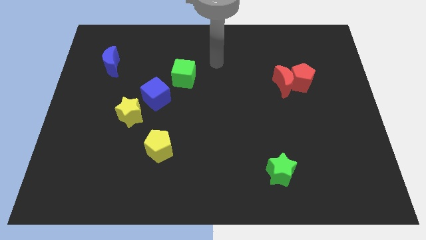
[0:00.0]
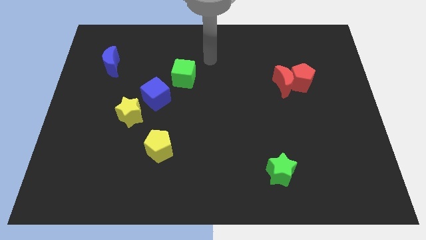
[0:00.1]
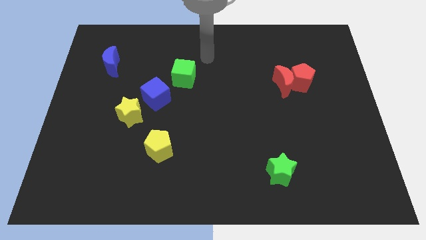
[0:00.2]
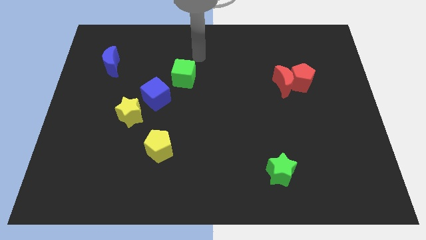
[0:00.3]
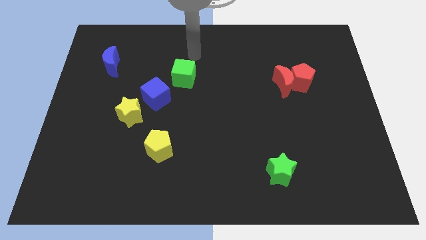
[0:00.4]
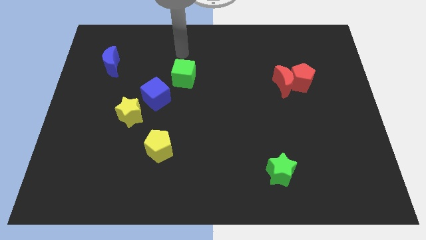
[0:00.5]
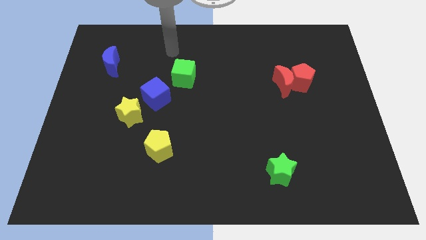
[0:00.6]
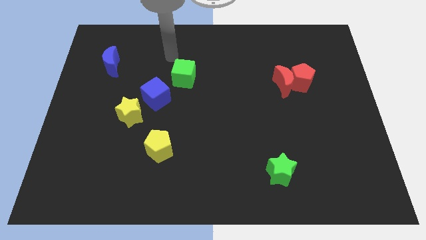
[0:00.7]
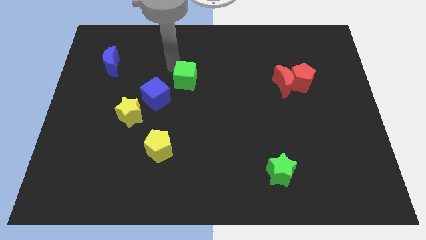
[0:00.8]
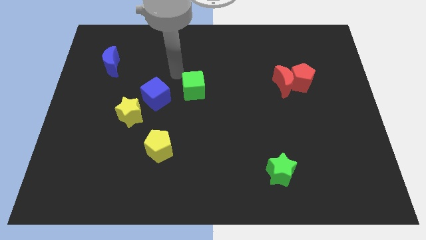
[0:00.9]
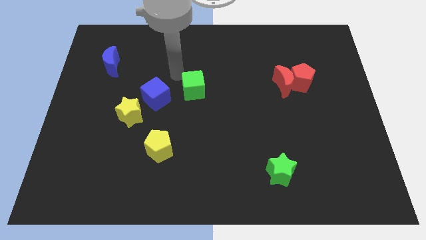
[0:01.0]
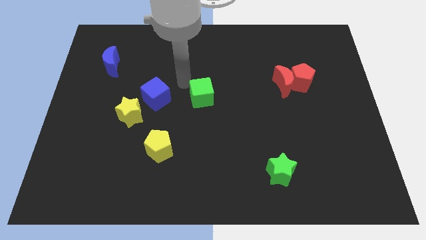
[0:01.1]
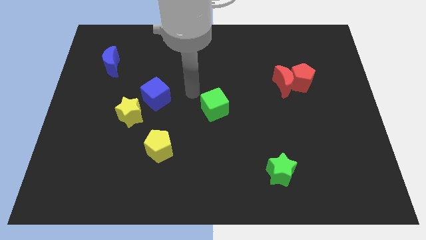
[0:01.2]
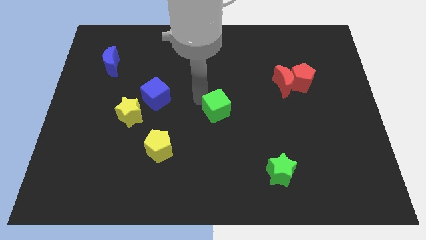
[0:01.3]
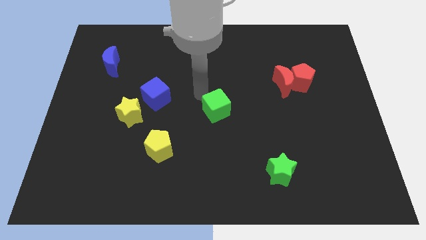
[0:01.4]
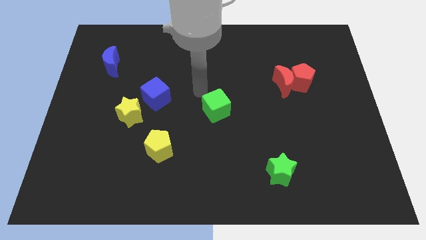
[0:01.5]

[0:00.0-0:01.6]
put the green cube between the yellow pentagon and red moon

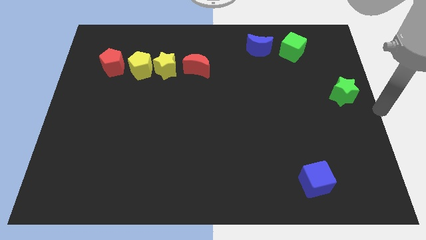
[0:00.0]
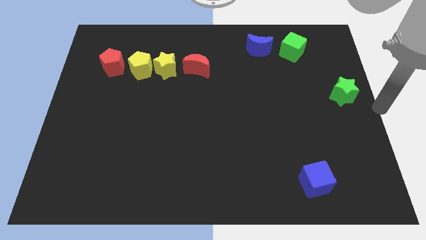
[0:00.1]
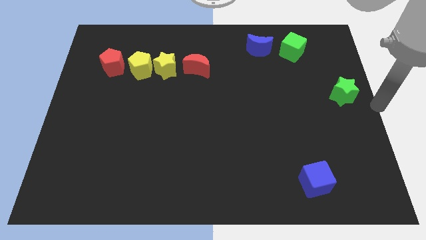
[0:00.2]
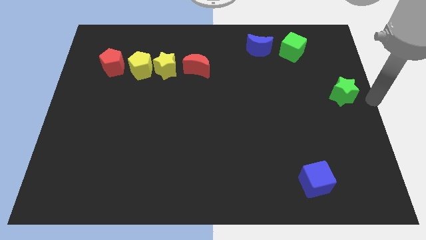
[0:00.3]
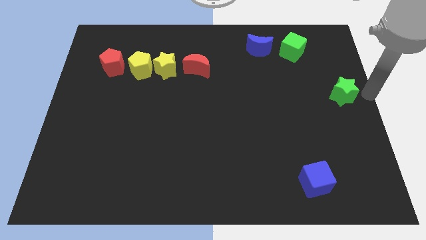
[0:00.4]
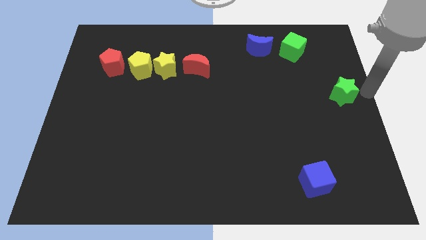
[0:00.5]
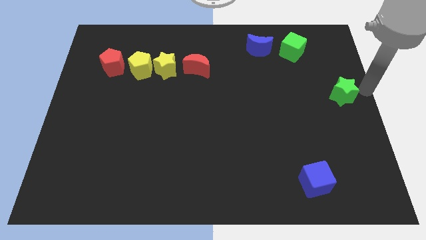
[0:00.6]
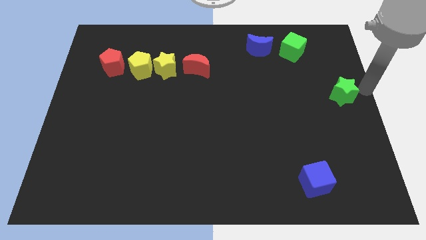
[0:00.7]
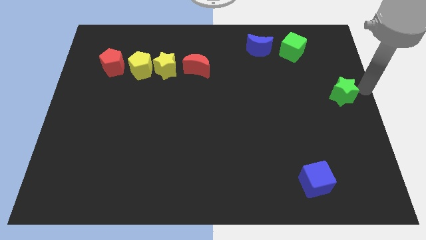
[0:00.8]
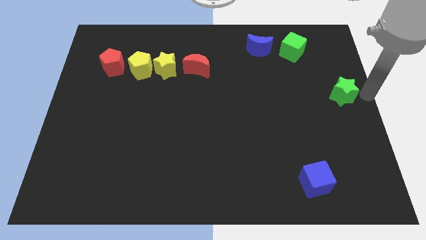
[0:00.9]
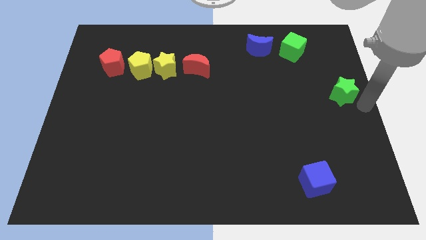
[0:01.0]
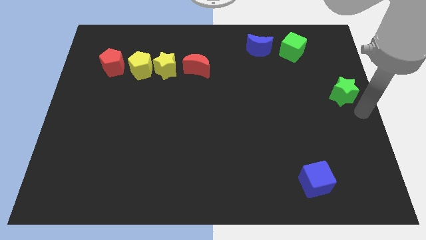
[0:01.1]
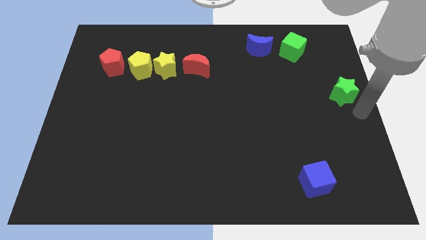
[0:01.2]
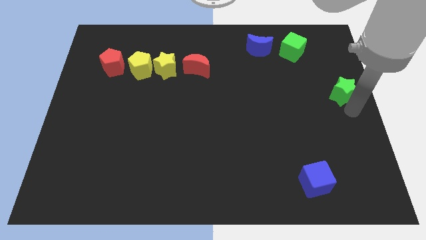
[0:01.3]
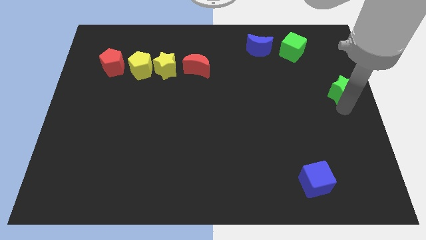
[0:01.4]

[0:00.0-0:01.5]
tap the green star

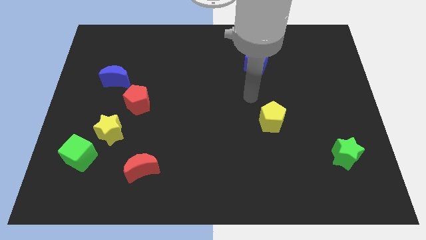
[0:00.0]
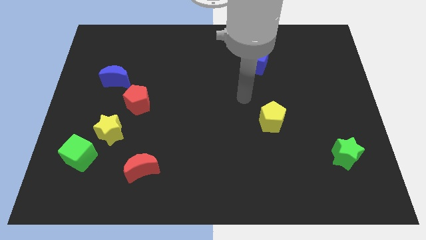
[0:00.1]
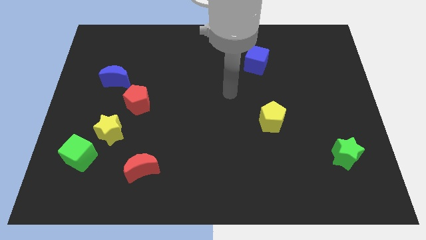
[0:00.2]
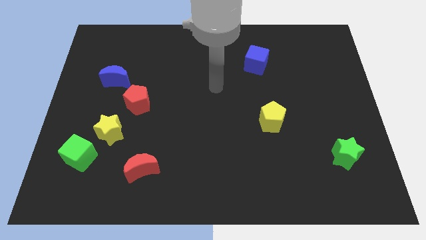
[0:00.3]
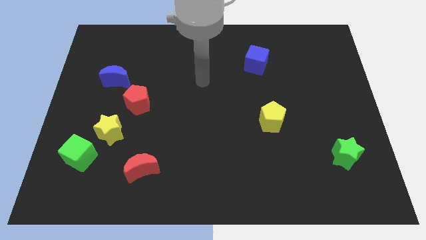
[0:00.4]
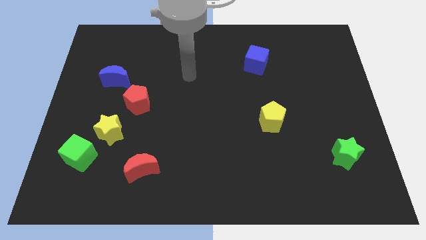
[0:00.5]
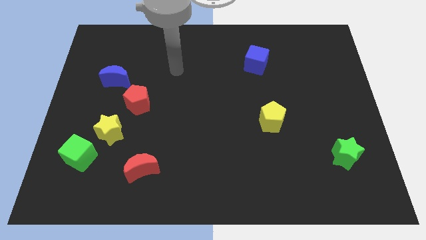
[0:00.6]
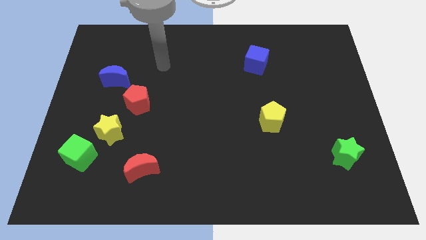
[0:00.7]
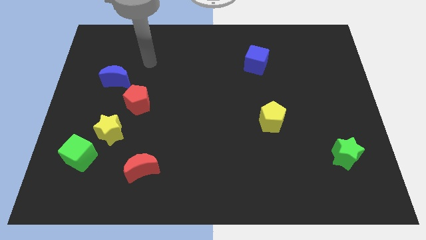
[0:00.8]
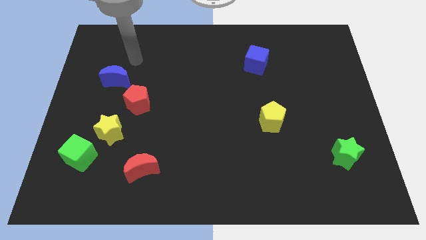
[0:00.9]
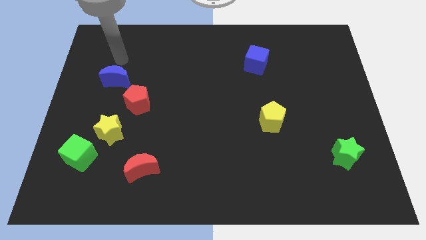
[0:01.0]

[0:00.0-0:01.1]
point your hand above the blue moon

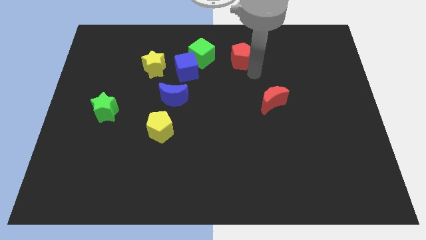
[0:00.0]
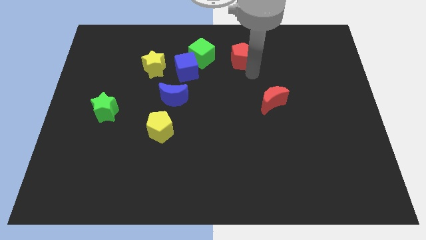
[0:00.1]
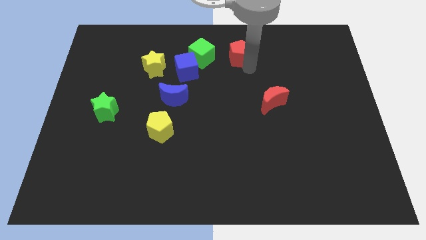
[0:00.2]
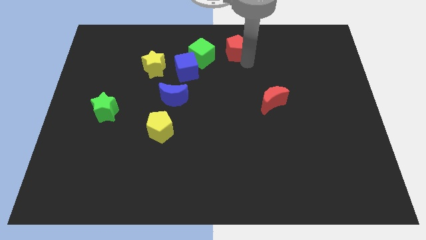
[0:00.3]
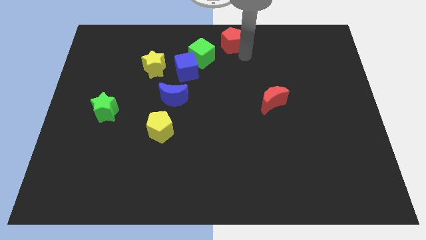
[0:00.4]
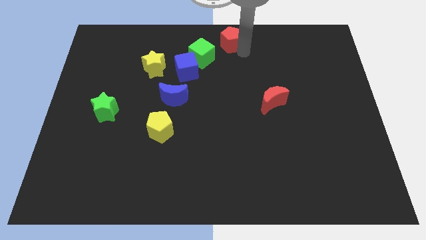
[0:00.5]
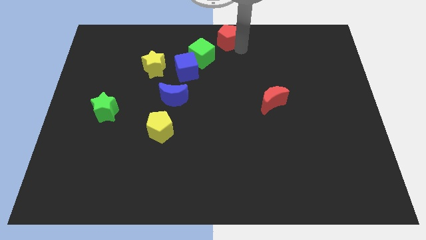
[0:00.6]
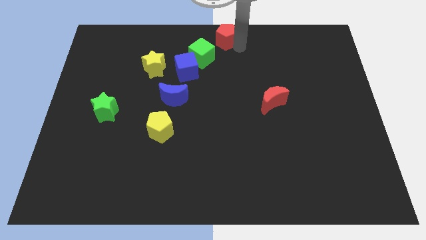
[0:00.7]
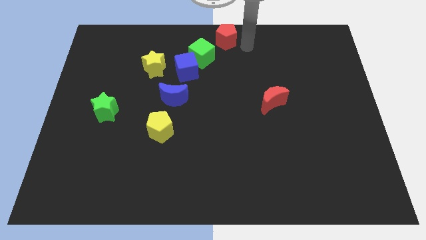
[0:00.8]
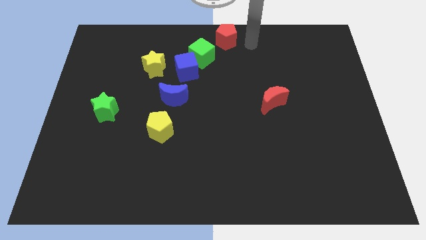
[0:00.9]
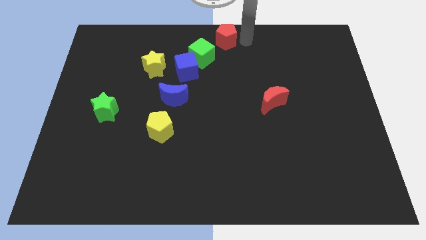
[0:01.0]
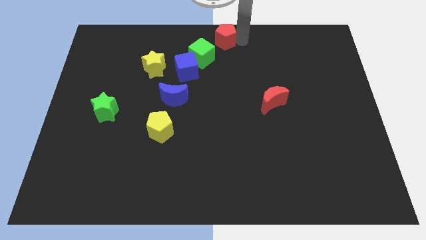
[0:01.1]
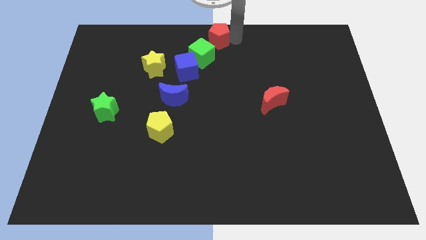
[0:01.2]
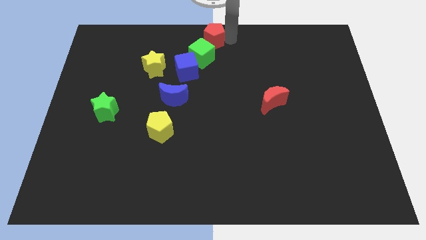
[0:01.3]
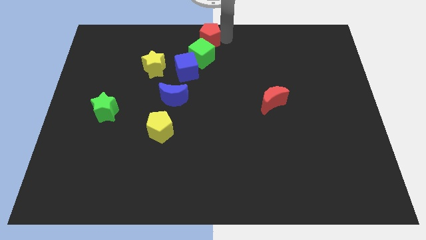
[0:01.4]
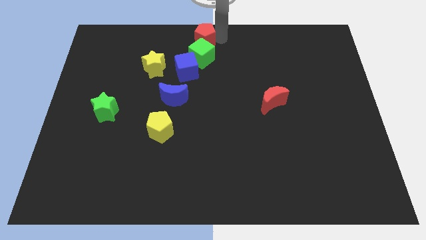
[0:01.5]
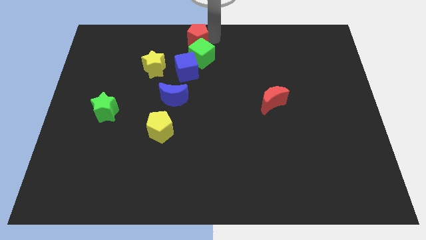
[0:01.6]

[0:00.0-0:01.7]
place the red pentagon above the green cube

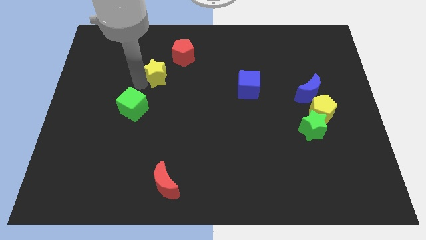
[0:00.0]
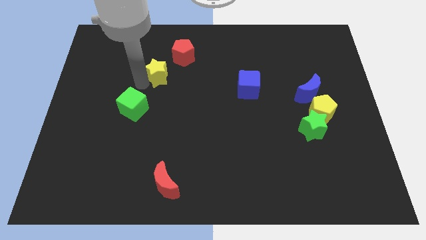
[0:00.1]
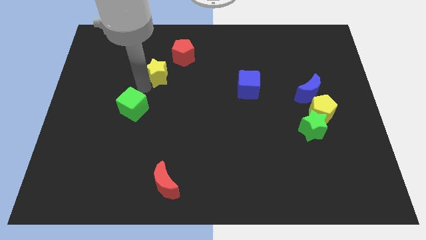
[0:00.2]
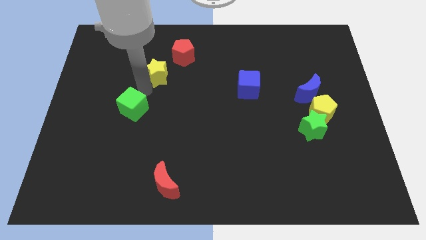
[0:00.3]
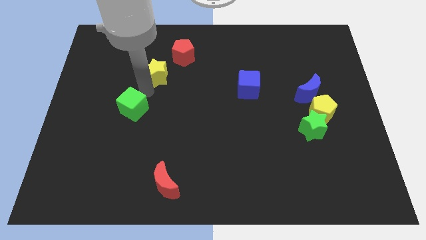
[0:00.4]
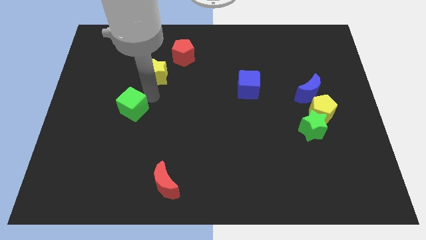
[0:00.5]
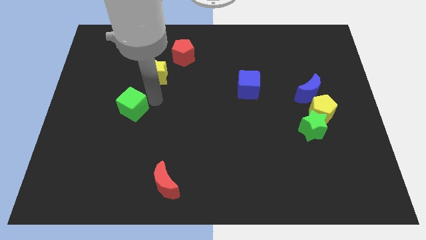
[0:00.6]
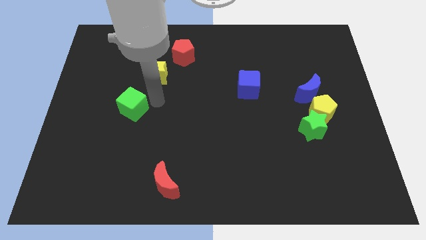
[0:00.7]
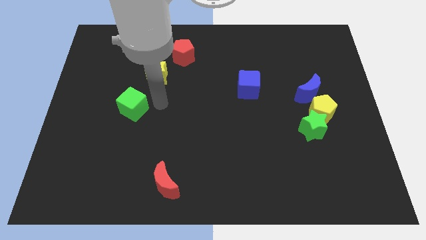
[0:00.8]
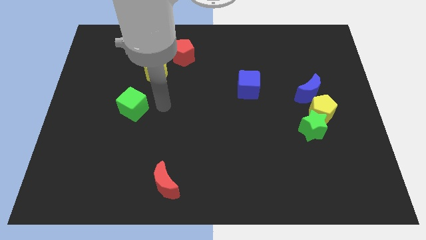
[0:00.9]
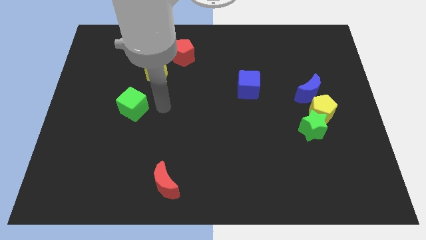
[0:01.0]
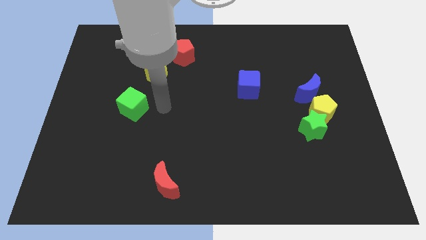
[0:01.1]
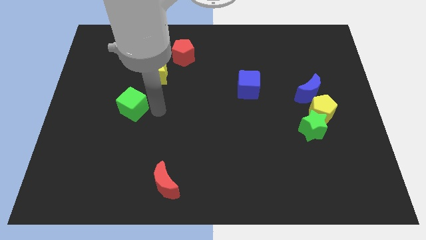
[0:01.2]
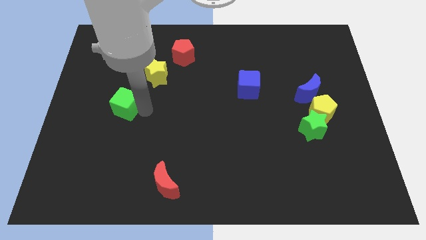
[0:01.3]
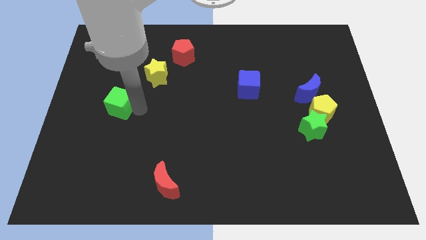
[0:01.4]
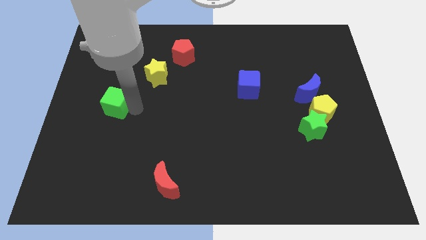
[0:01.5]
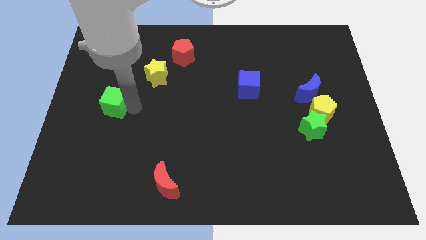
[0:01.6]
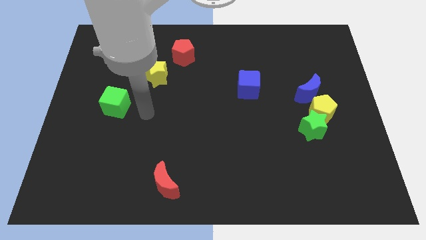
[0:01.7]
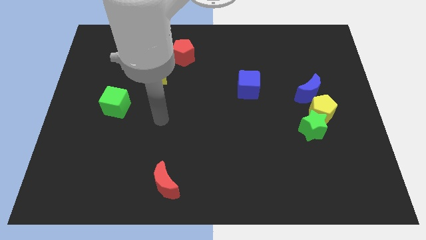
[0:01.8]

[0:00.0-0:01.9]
drag the green cube slightly to the left

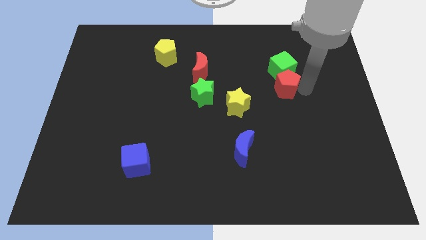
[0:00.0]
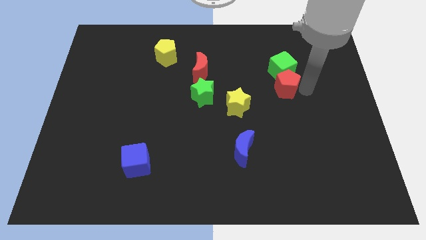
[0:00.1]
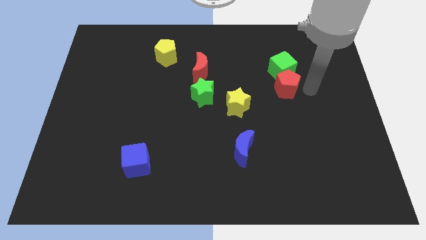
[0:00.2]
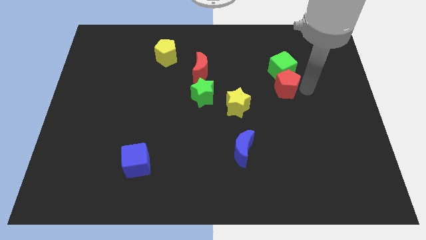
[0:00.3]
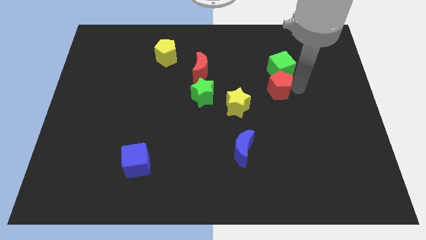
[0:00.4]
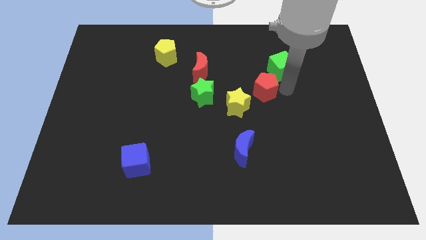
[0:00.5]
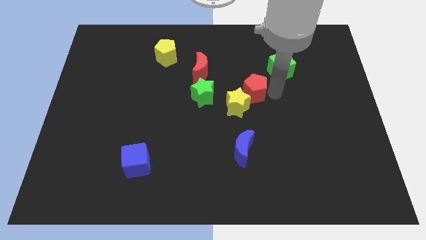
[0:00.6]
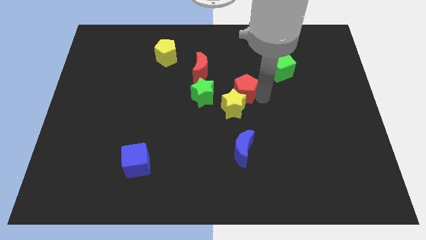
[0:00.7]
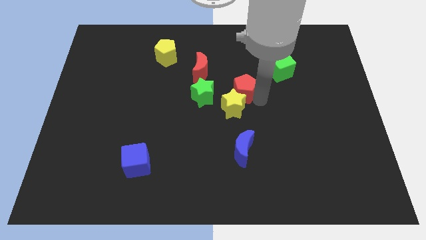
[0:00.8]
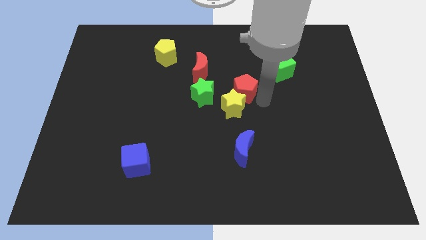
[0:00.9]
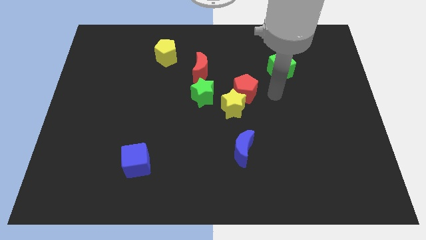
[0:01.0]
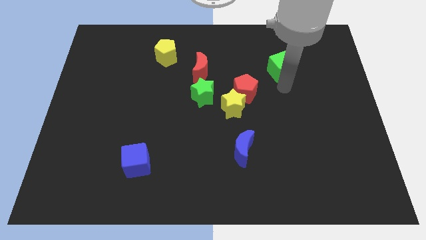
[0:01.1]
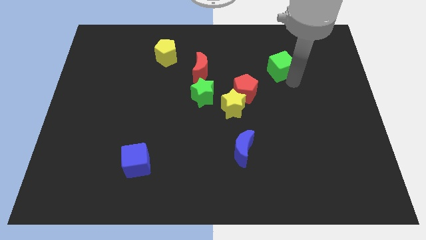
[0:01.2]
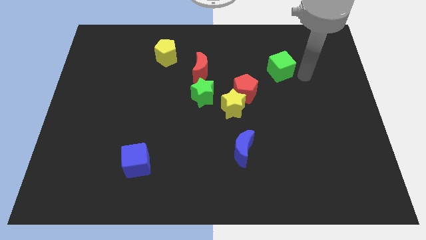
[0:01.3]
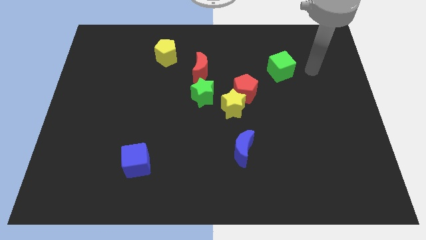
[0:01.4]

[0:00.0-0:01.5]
move the red pentagon on right top of the yellow star
